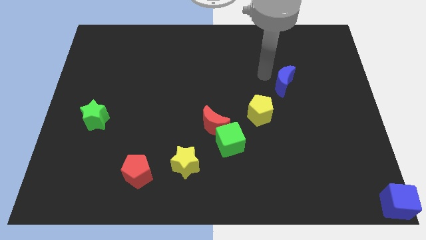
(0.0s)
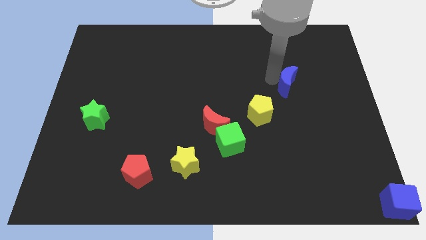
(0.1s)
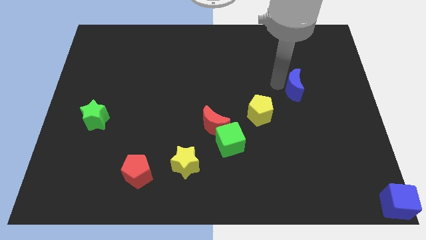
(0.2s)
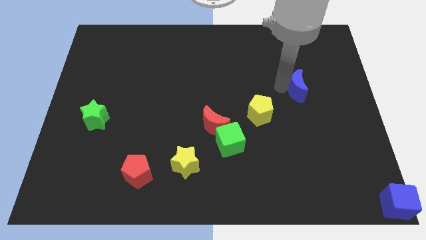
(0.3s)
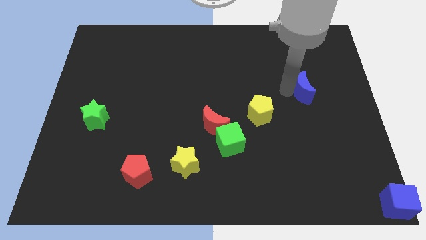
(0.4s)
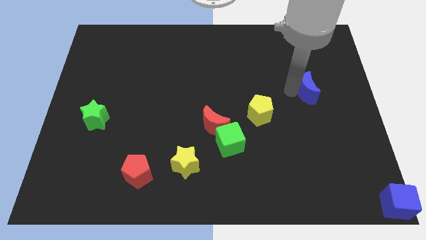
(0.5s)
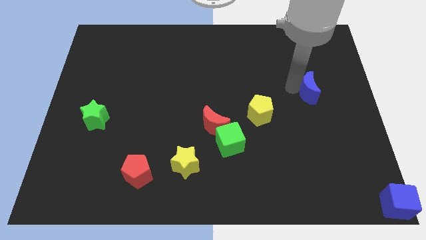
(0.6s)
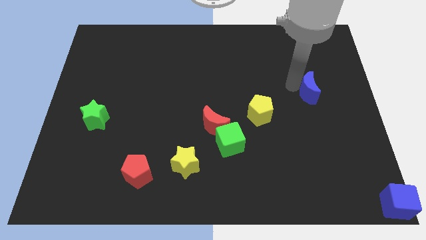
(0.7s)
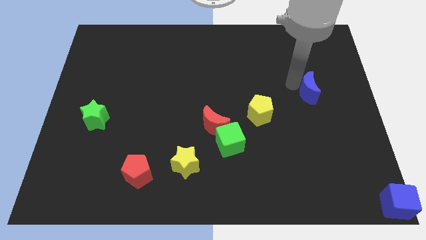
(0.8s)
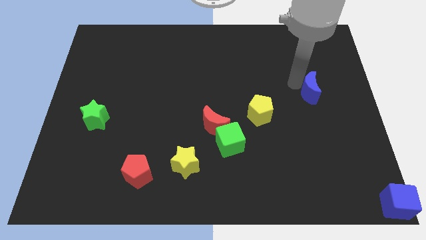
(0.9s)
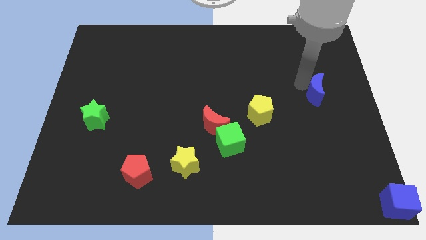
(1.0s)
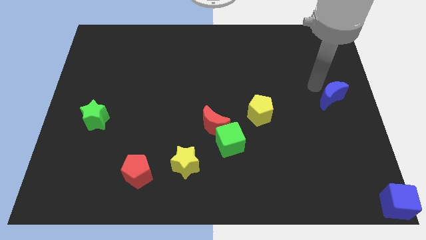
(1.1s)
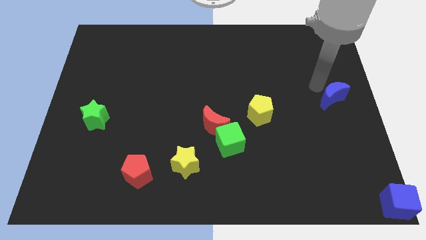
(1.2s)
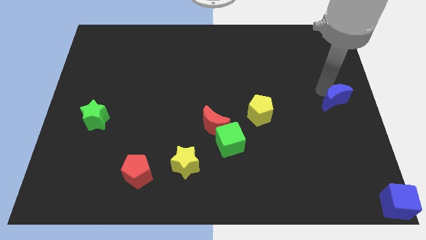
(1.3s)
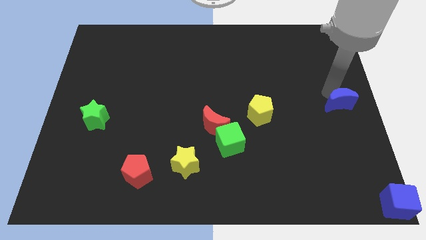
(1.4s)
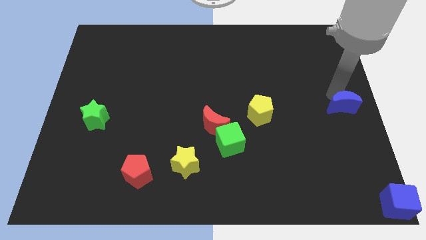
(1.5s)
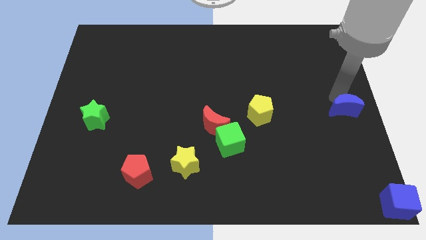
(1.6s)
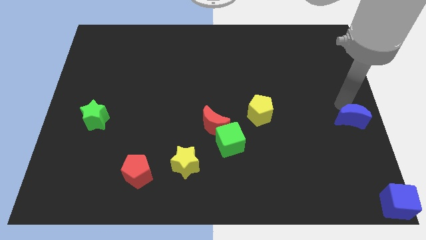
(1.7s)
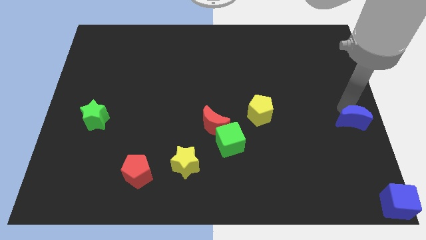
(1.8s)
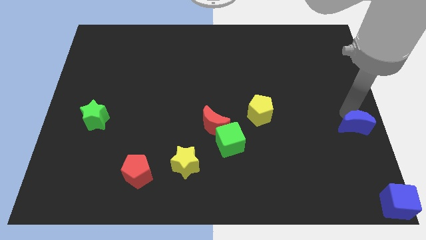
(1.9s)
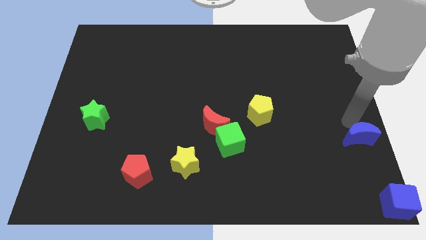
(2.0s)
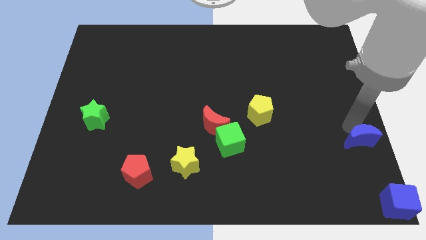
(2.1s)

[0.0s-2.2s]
move the blue moon above the blue cube

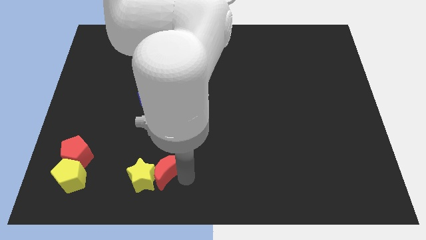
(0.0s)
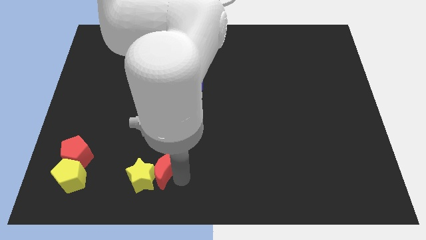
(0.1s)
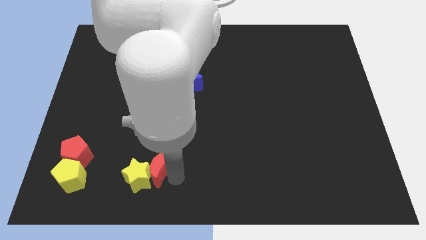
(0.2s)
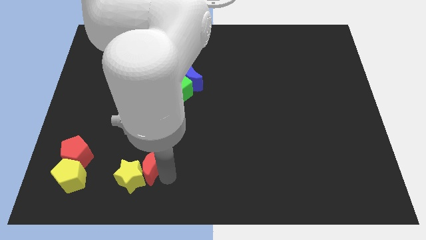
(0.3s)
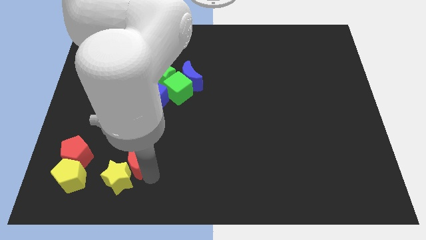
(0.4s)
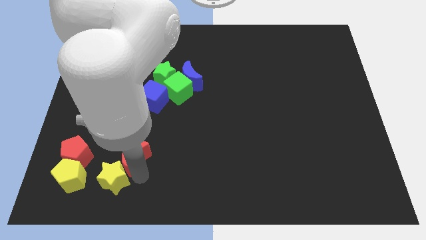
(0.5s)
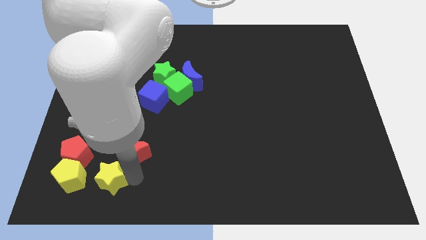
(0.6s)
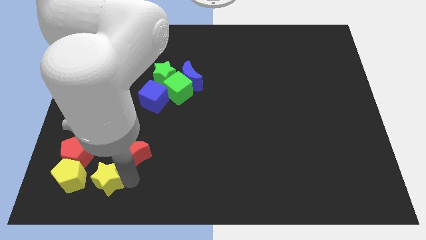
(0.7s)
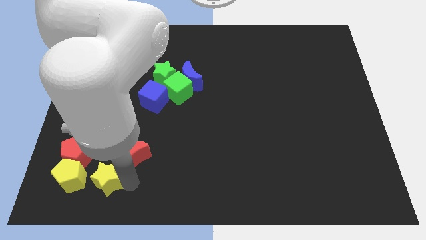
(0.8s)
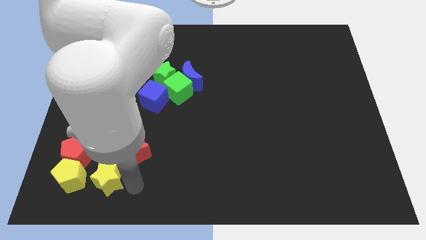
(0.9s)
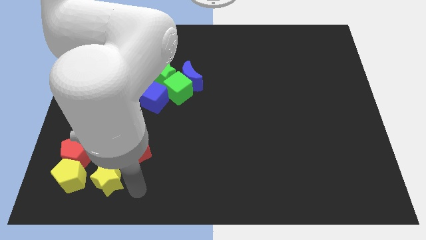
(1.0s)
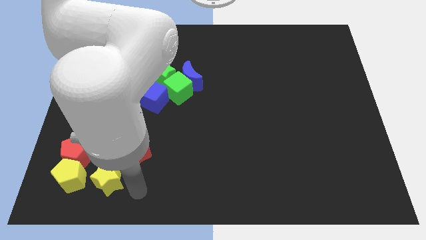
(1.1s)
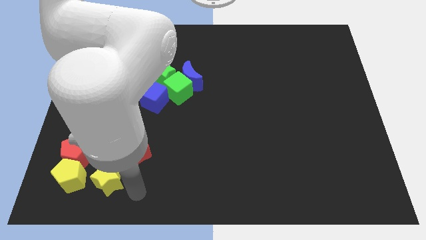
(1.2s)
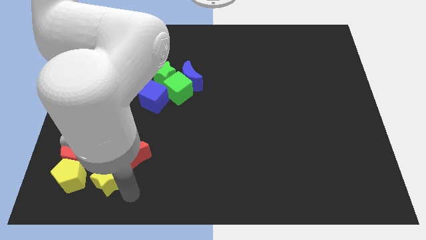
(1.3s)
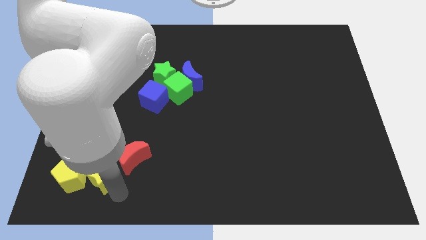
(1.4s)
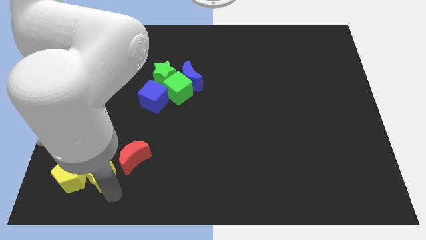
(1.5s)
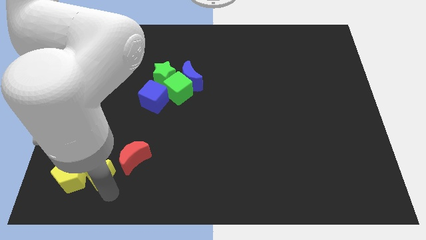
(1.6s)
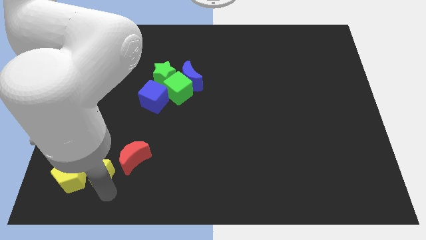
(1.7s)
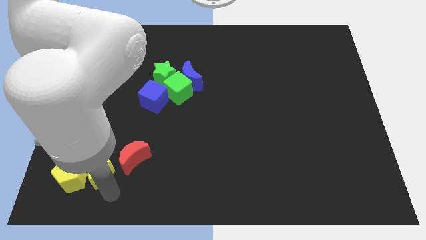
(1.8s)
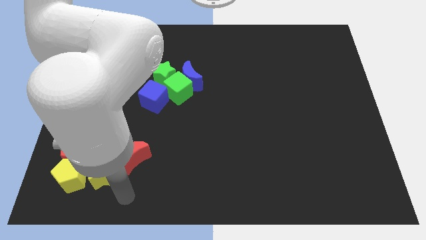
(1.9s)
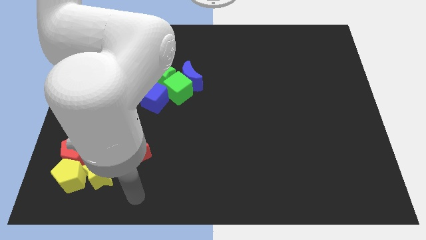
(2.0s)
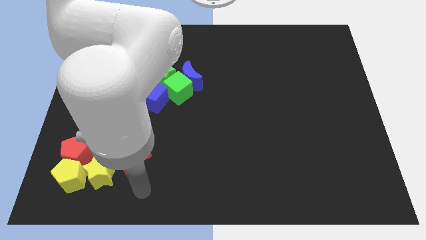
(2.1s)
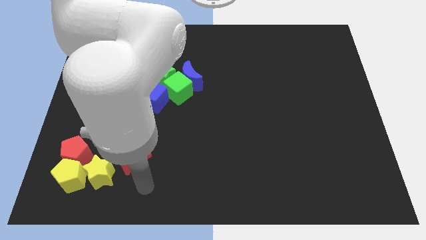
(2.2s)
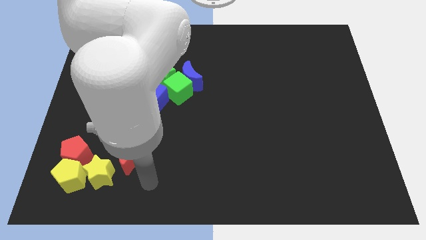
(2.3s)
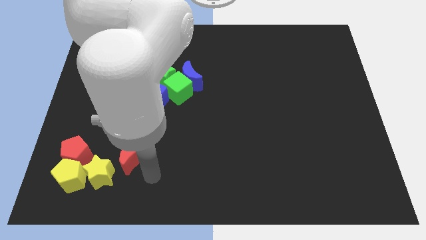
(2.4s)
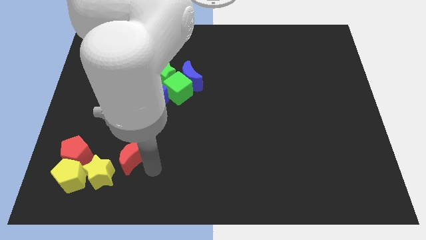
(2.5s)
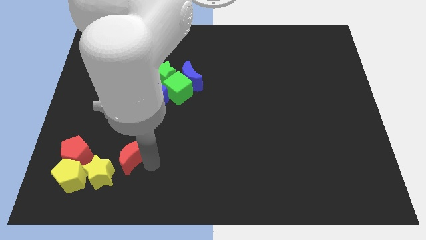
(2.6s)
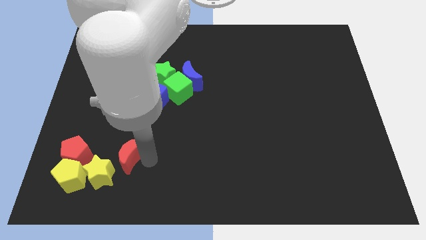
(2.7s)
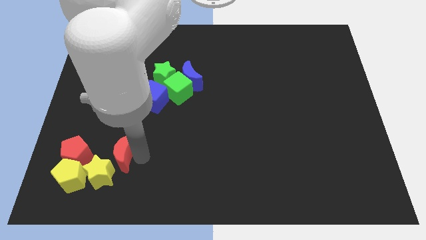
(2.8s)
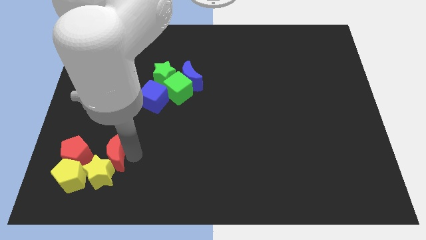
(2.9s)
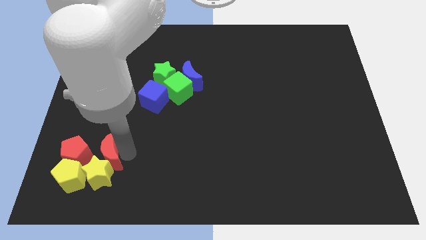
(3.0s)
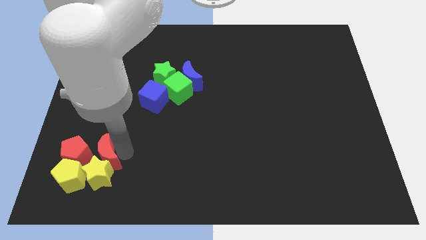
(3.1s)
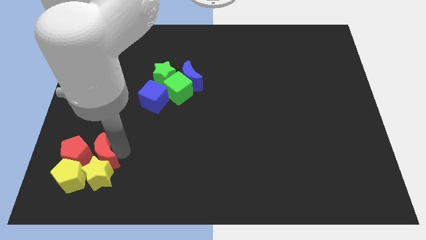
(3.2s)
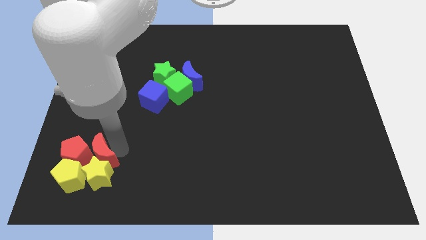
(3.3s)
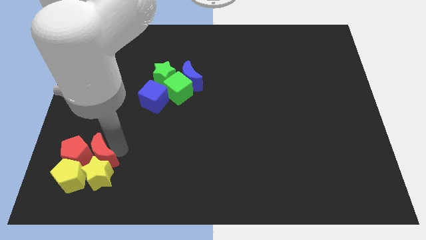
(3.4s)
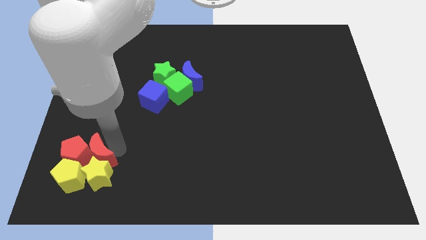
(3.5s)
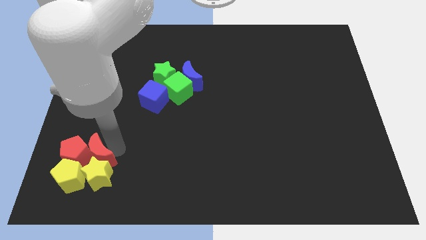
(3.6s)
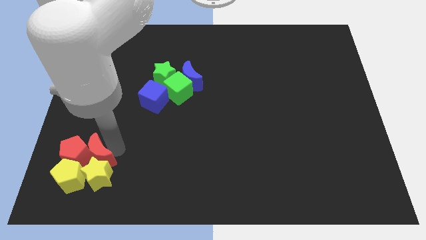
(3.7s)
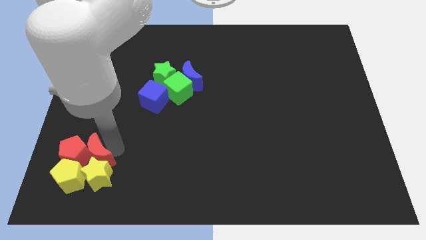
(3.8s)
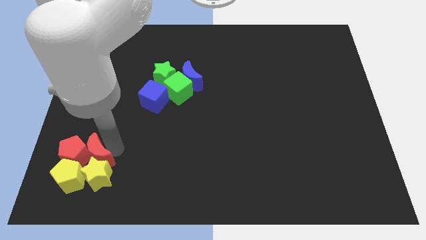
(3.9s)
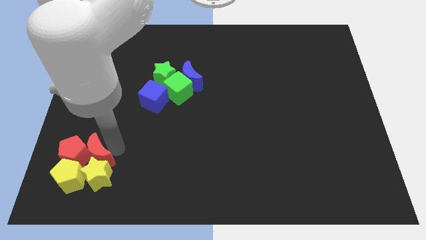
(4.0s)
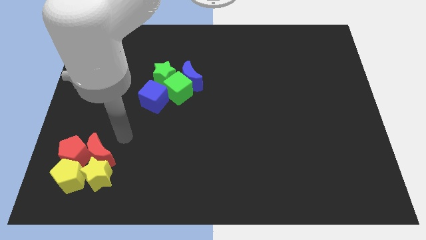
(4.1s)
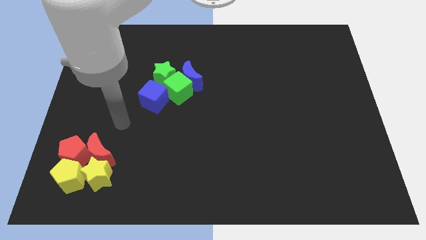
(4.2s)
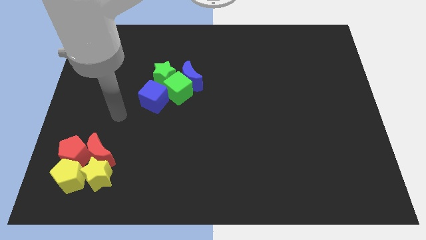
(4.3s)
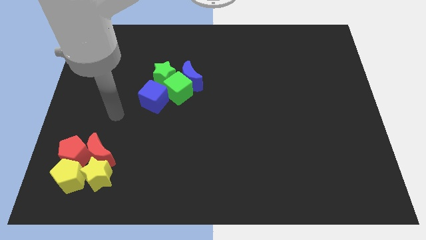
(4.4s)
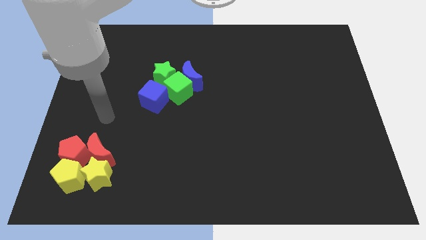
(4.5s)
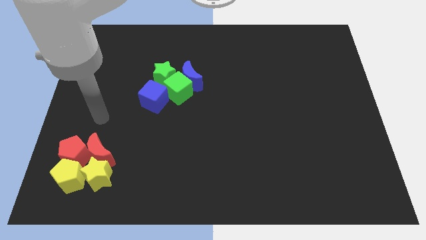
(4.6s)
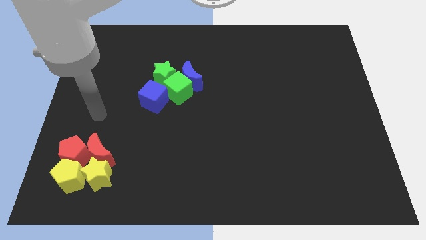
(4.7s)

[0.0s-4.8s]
make a group of yellow and red blocks at the bottom left corner of the board

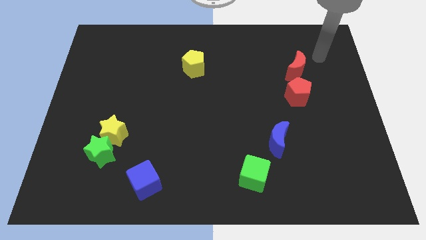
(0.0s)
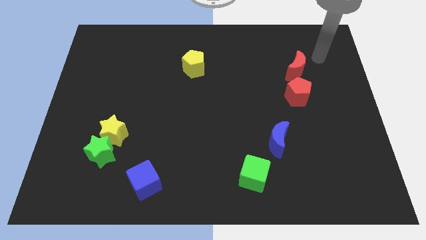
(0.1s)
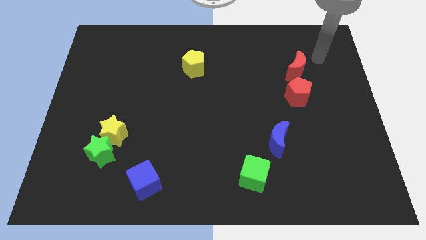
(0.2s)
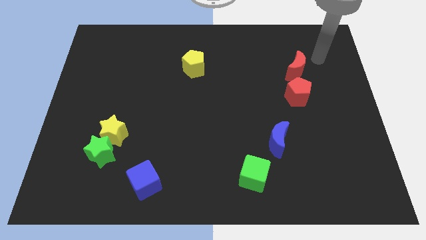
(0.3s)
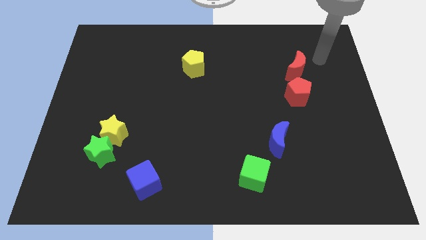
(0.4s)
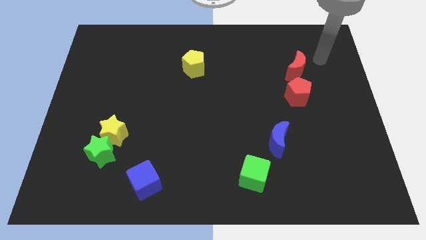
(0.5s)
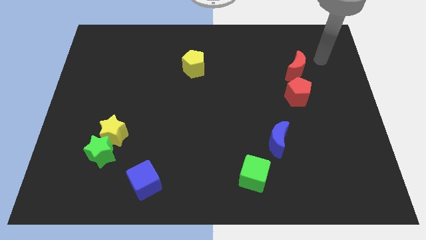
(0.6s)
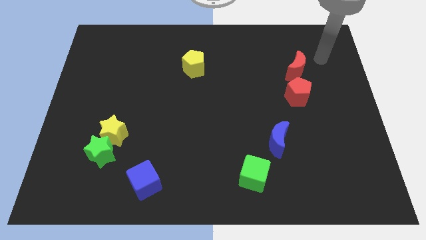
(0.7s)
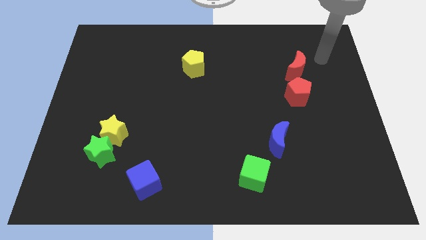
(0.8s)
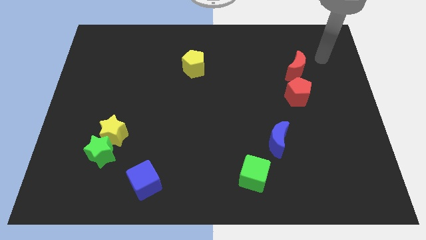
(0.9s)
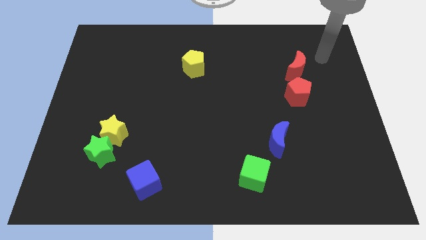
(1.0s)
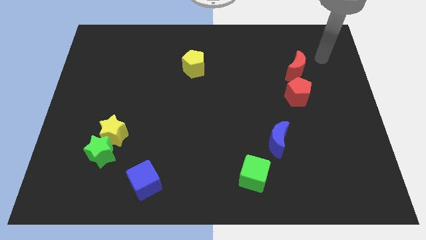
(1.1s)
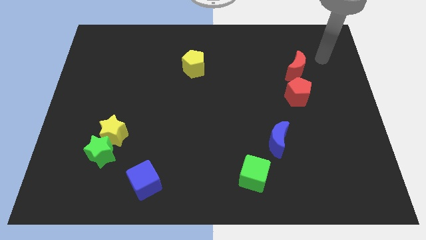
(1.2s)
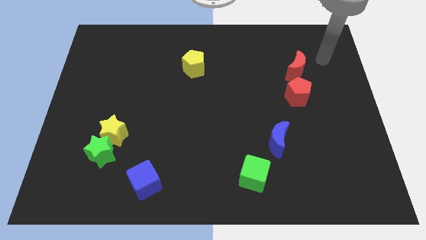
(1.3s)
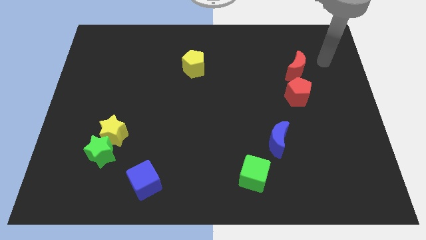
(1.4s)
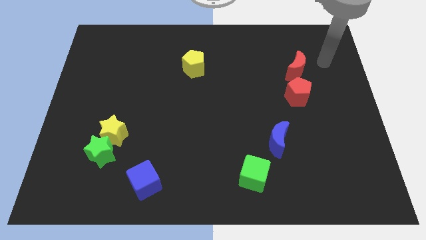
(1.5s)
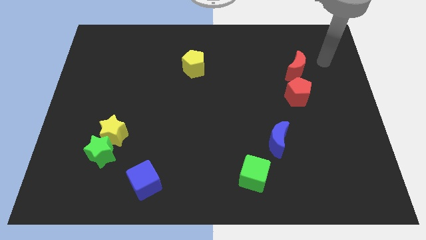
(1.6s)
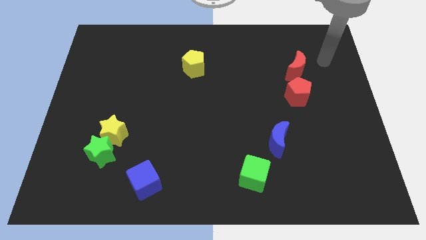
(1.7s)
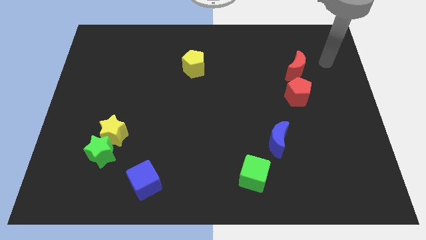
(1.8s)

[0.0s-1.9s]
move your arm ot the right of the red moon

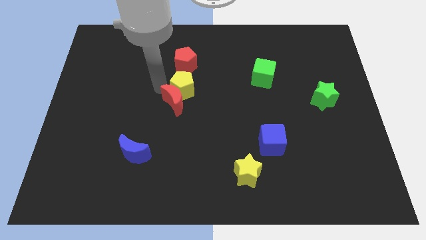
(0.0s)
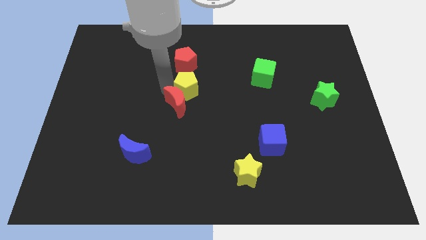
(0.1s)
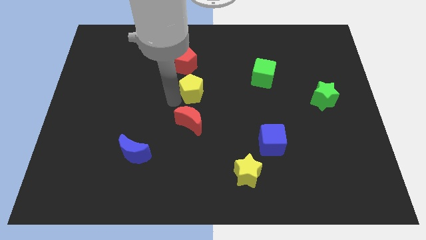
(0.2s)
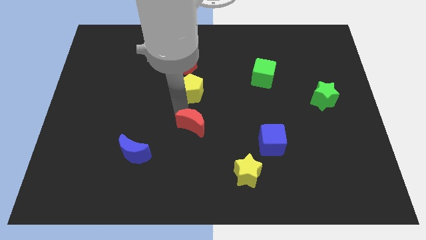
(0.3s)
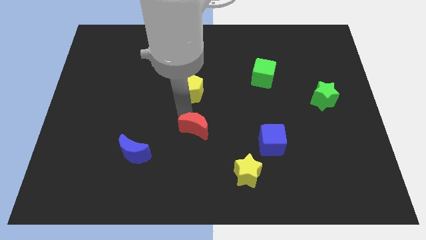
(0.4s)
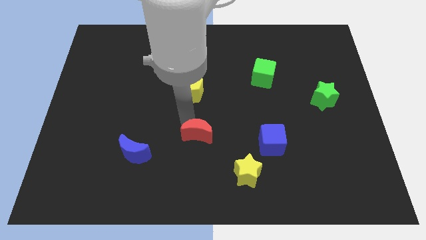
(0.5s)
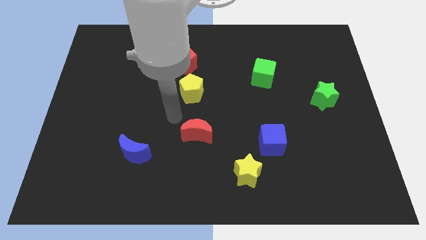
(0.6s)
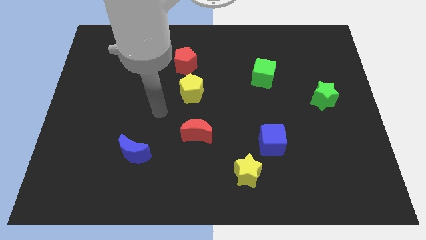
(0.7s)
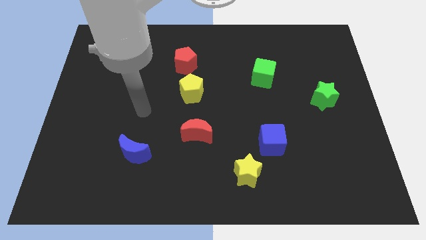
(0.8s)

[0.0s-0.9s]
separate the red moon from the yellow pentagon
